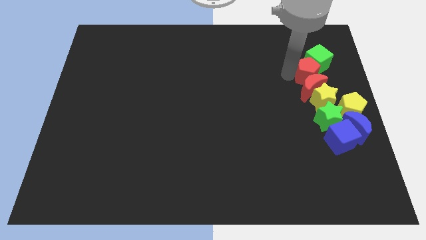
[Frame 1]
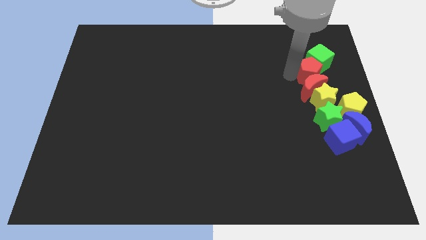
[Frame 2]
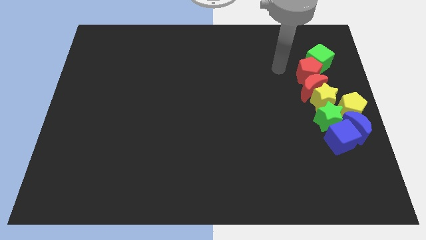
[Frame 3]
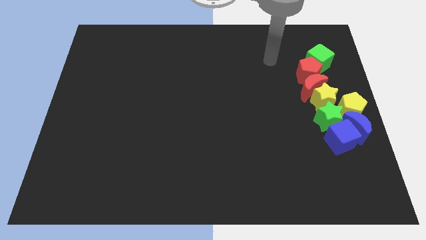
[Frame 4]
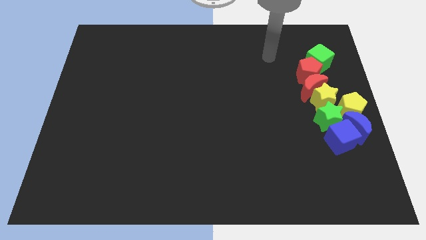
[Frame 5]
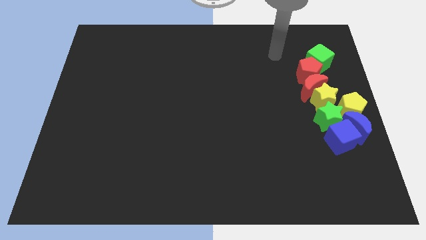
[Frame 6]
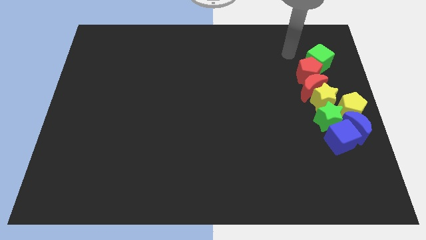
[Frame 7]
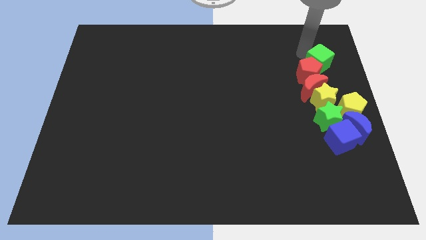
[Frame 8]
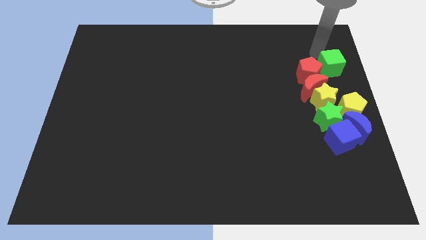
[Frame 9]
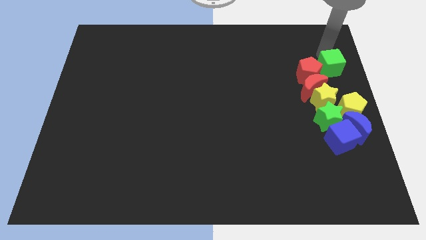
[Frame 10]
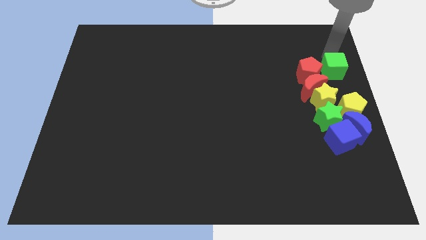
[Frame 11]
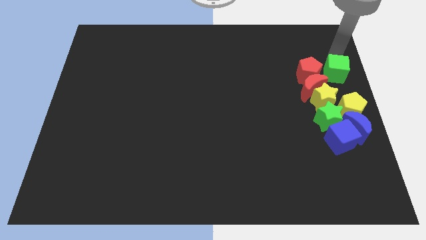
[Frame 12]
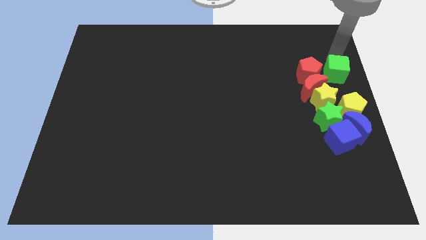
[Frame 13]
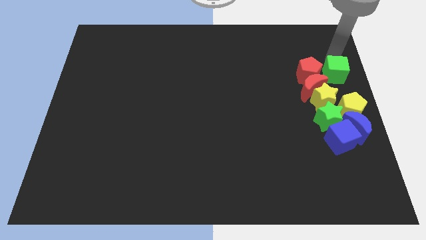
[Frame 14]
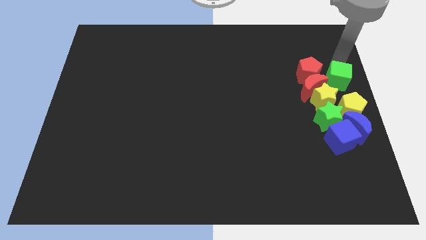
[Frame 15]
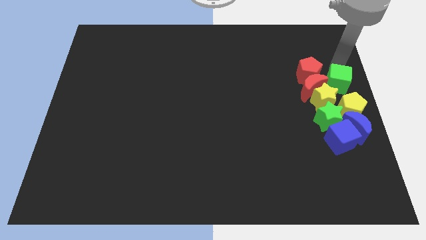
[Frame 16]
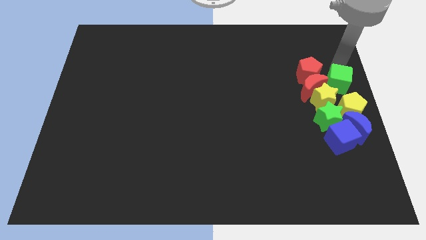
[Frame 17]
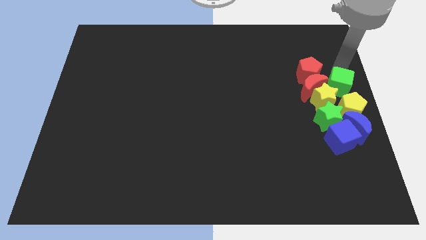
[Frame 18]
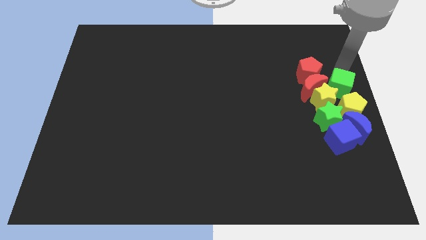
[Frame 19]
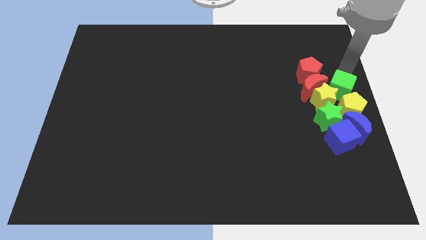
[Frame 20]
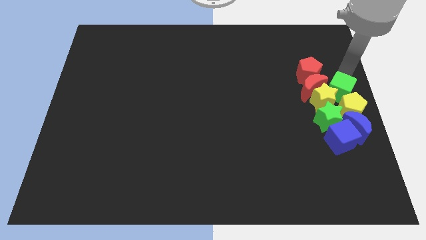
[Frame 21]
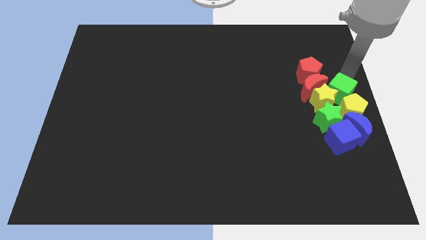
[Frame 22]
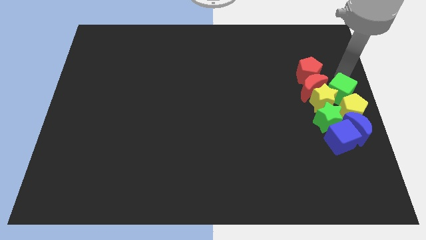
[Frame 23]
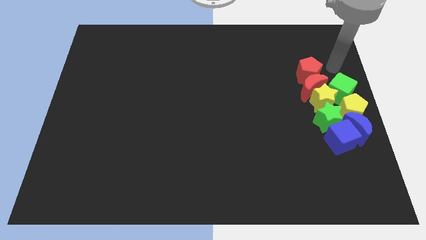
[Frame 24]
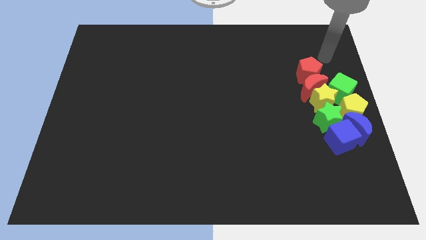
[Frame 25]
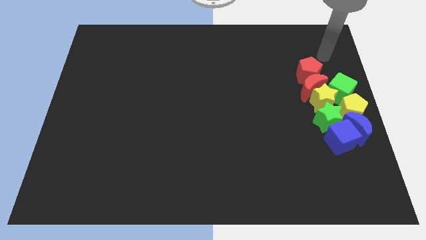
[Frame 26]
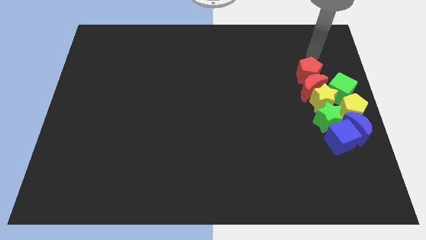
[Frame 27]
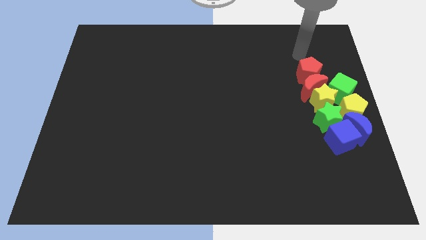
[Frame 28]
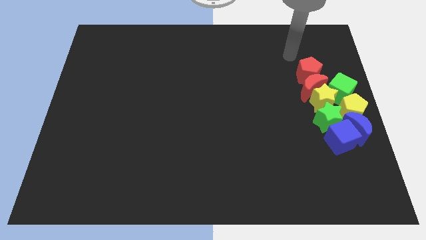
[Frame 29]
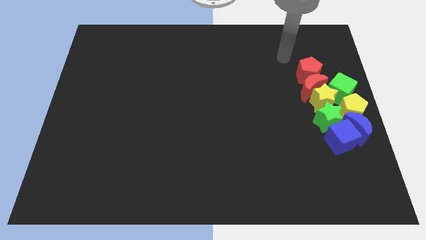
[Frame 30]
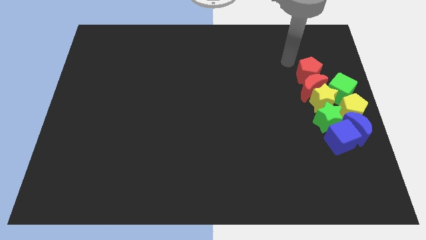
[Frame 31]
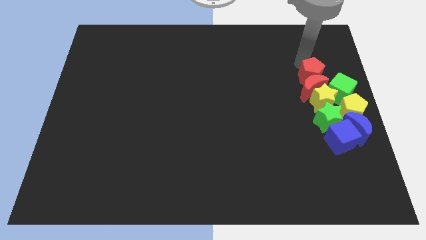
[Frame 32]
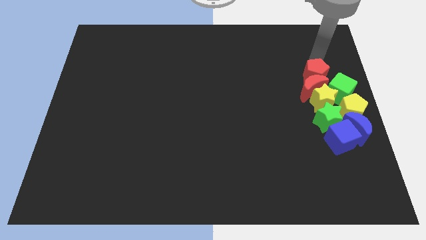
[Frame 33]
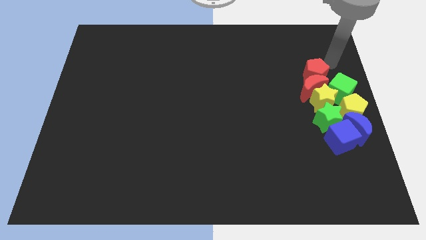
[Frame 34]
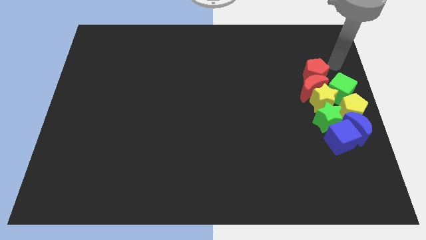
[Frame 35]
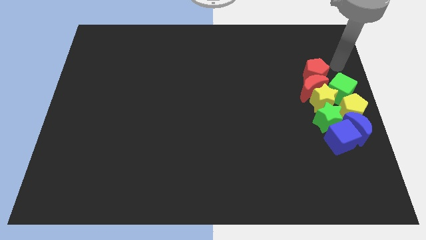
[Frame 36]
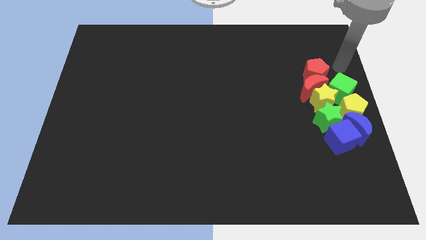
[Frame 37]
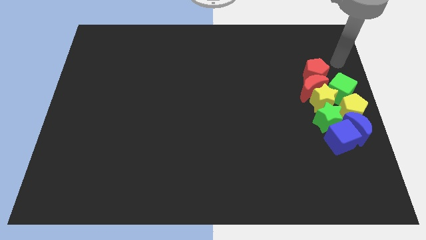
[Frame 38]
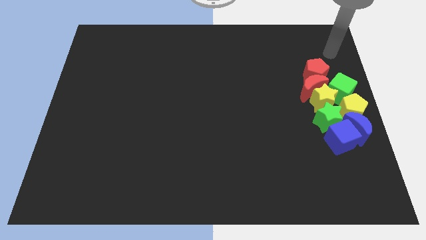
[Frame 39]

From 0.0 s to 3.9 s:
push the green cube towards yellow pentagon

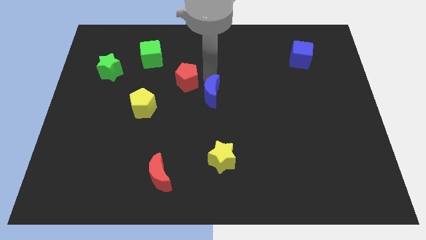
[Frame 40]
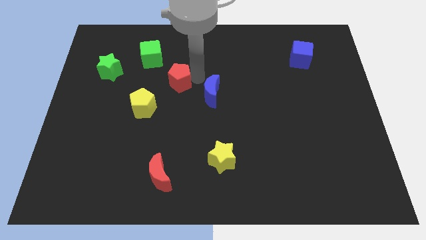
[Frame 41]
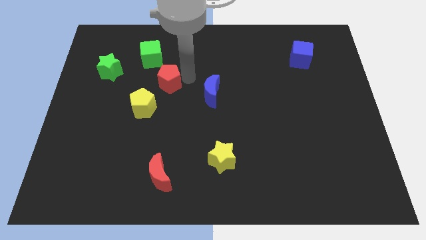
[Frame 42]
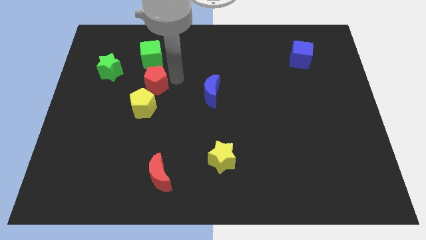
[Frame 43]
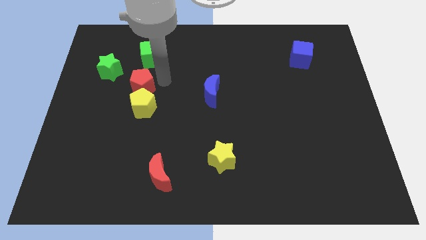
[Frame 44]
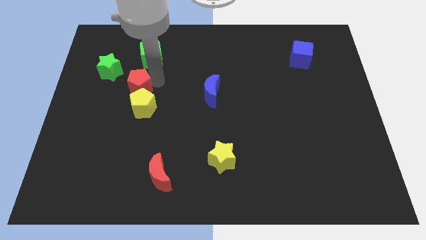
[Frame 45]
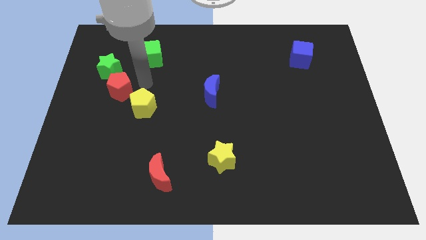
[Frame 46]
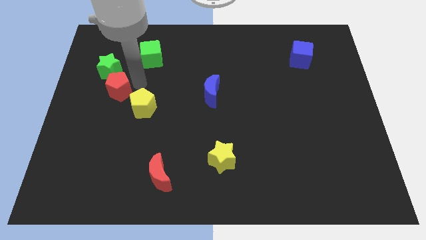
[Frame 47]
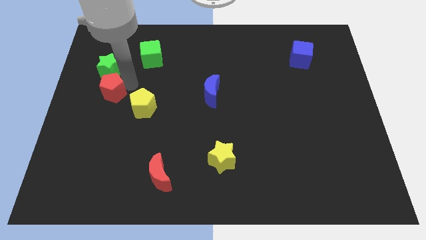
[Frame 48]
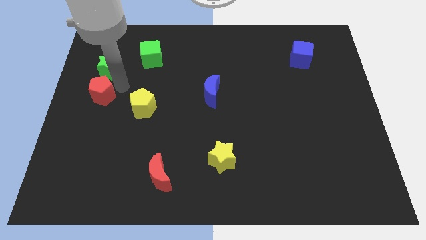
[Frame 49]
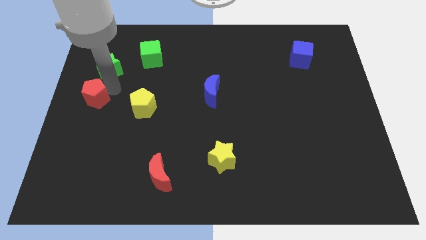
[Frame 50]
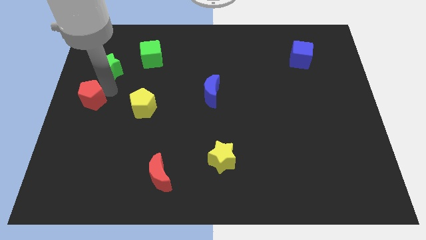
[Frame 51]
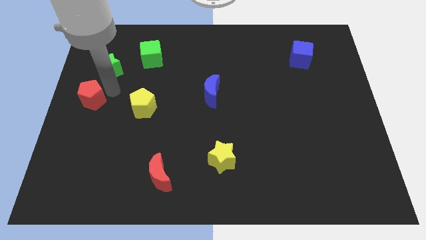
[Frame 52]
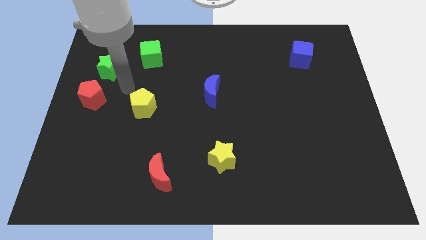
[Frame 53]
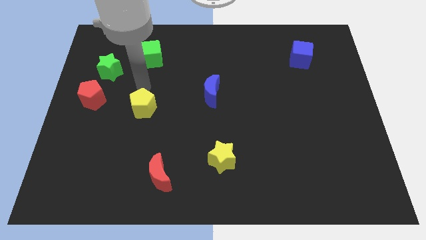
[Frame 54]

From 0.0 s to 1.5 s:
place the red pentagon diagonal to the green star

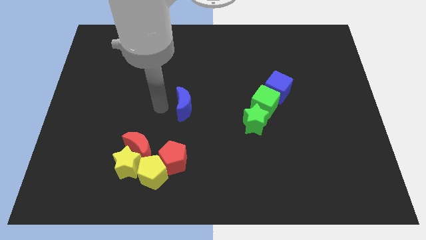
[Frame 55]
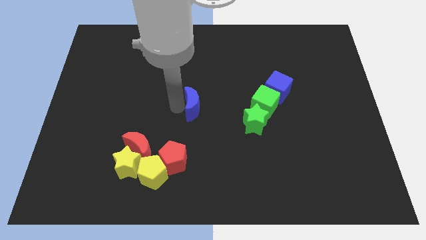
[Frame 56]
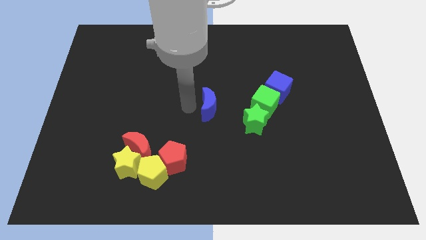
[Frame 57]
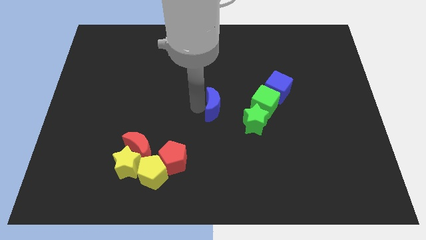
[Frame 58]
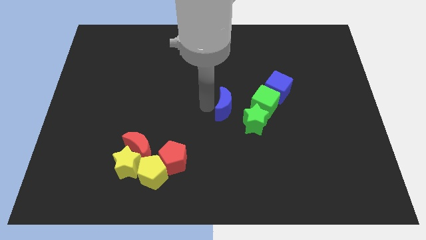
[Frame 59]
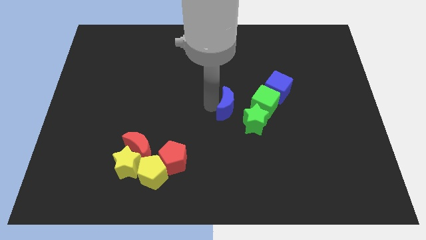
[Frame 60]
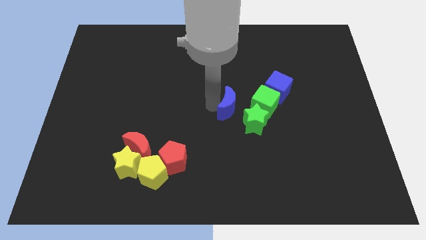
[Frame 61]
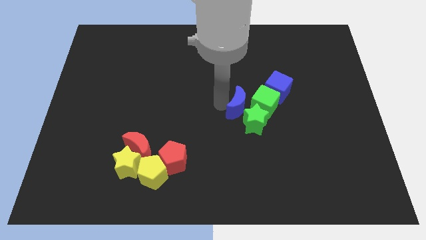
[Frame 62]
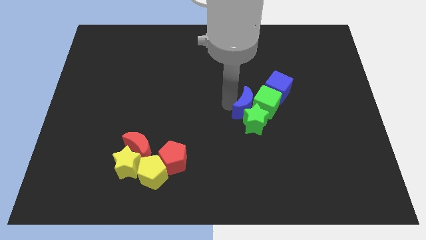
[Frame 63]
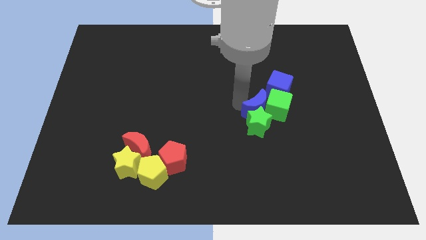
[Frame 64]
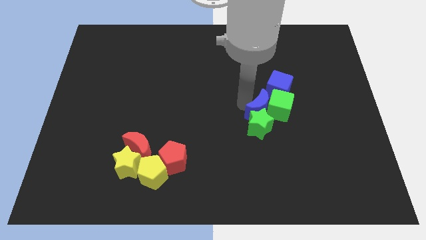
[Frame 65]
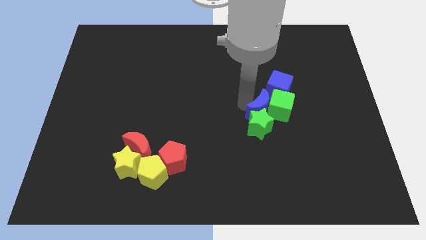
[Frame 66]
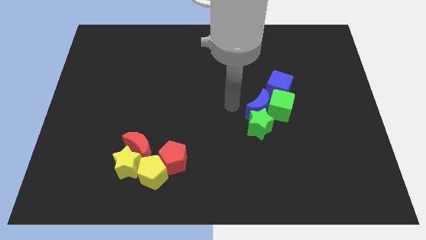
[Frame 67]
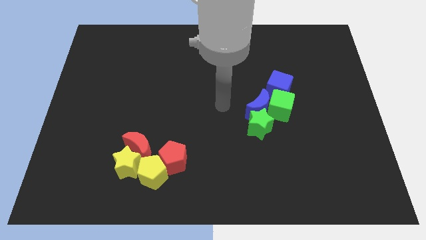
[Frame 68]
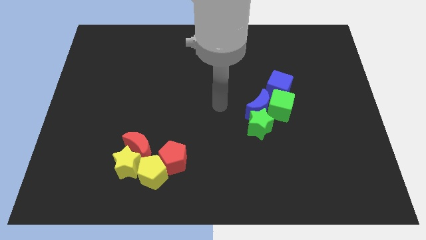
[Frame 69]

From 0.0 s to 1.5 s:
place the blue moon to the left side of the green cube

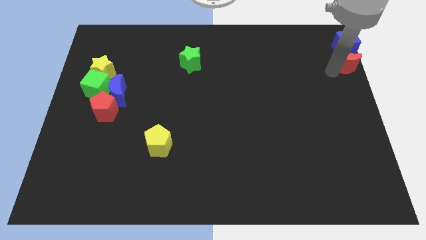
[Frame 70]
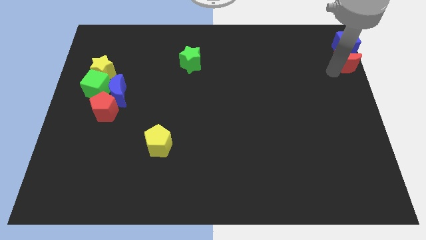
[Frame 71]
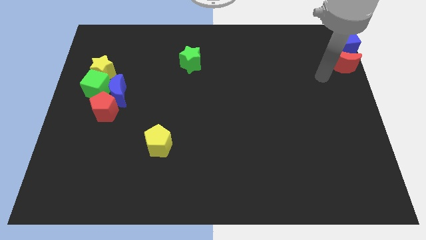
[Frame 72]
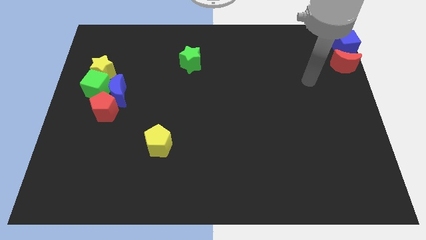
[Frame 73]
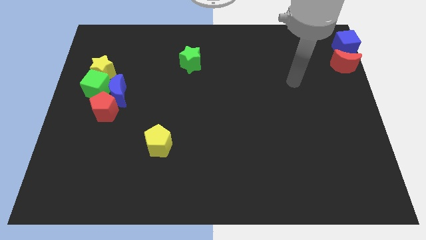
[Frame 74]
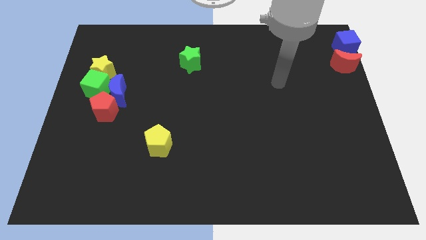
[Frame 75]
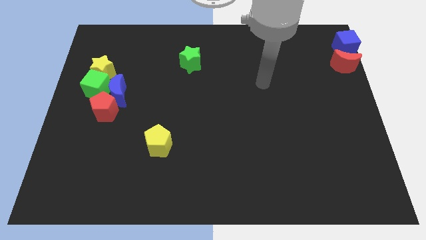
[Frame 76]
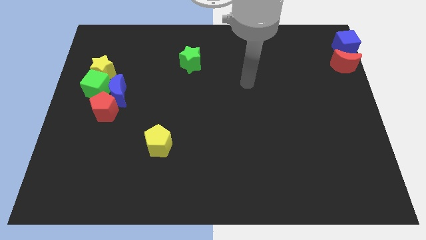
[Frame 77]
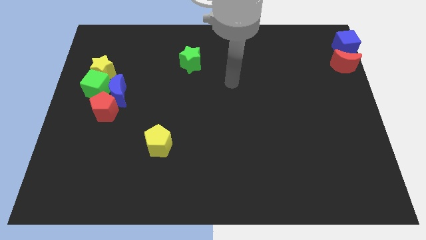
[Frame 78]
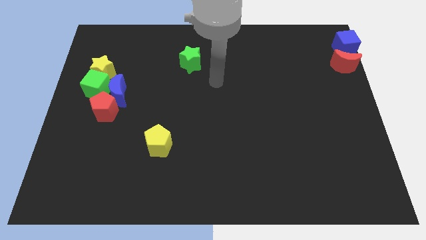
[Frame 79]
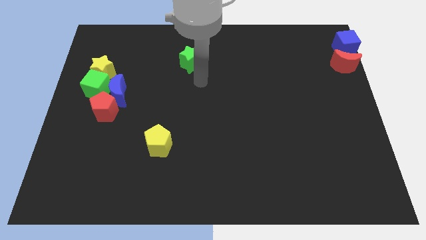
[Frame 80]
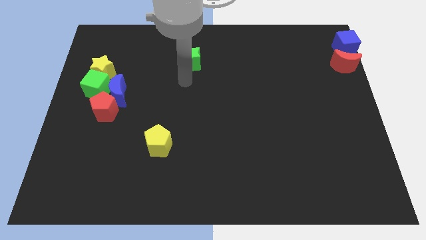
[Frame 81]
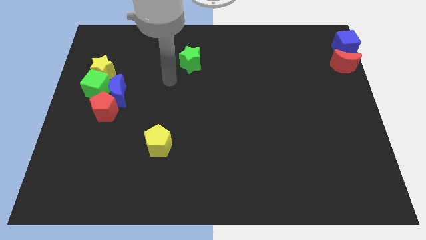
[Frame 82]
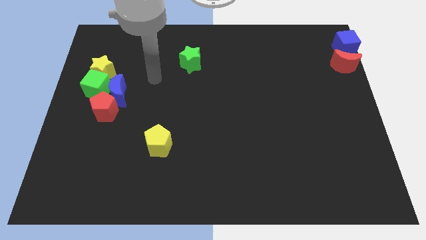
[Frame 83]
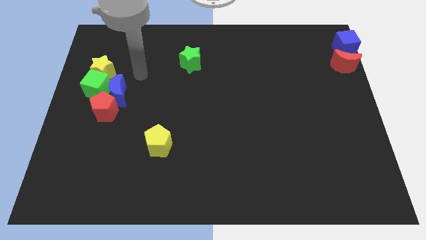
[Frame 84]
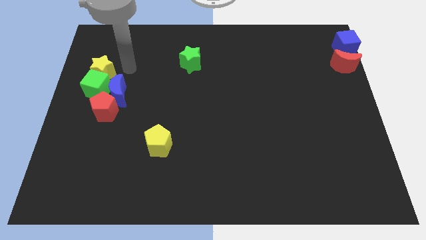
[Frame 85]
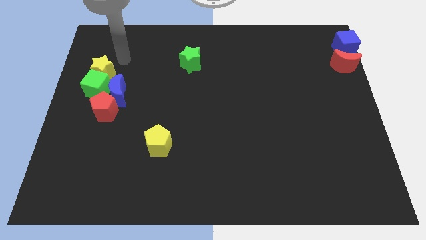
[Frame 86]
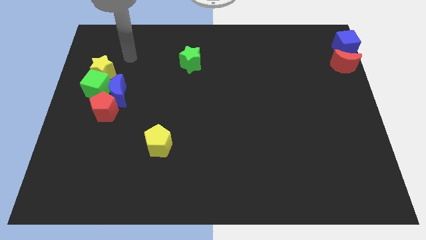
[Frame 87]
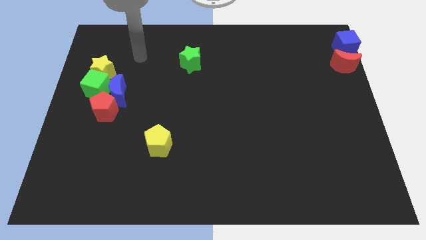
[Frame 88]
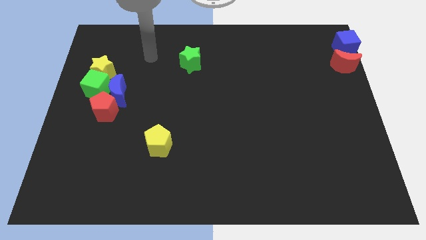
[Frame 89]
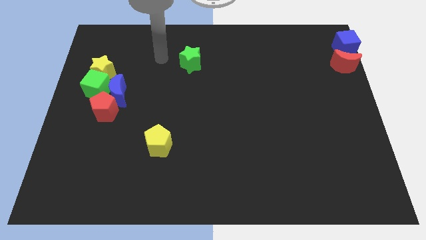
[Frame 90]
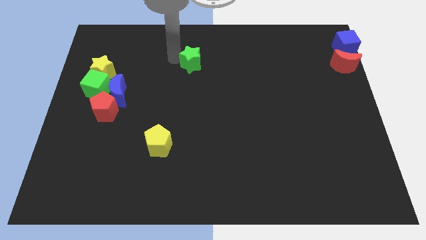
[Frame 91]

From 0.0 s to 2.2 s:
move your arm on the left of the green star
